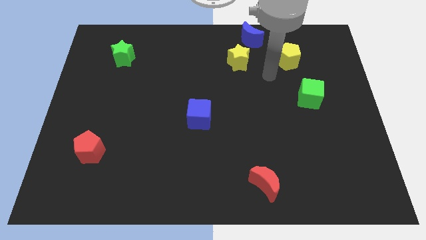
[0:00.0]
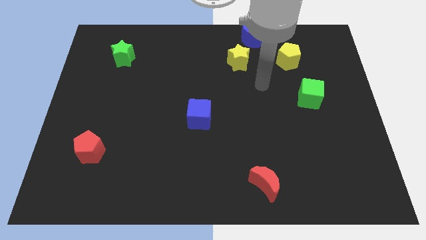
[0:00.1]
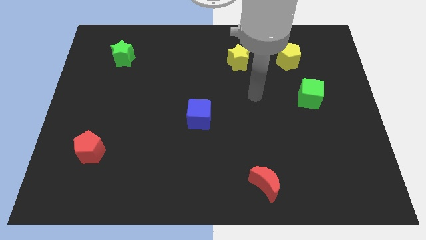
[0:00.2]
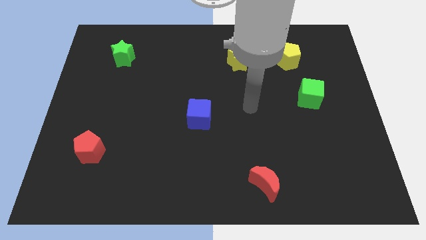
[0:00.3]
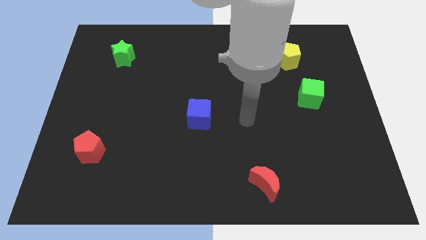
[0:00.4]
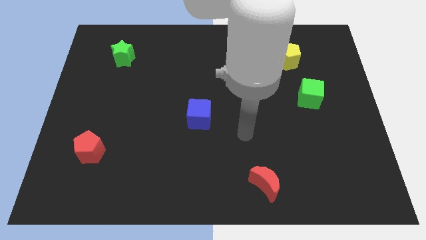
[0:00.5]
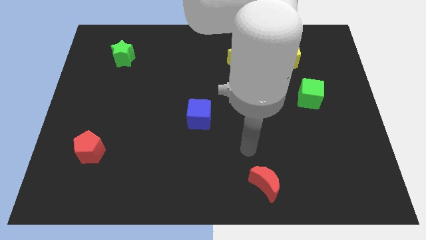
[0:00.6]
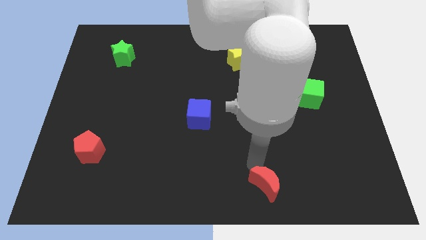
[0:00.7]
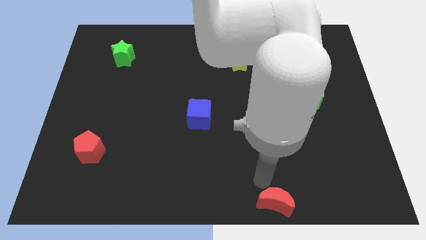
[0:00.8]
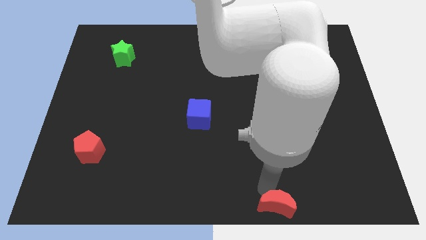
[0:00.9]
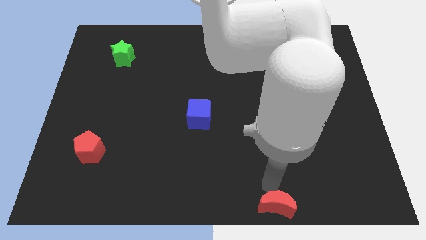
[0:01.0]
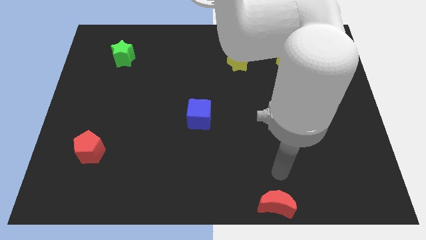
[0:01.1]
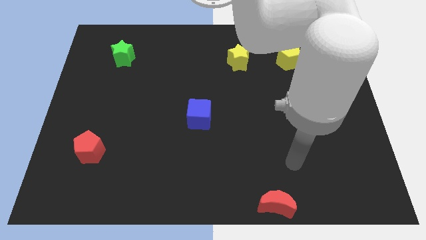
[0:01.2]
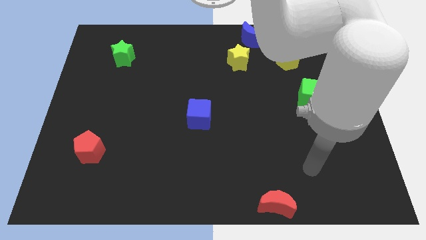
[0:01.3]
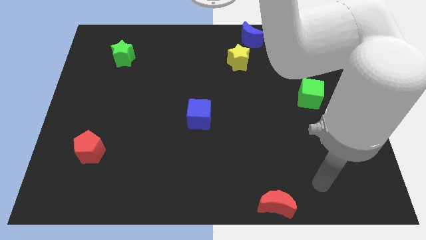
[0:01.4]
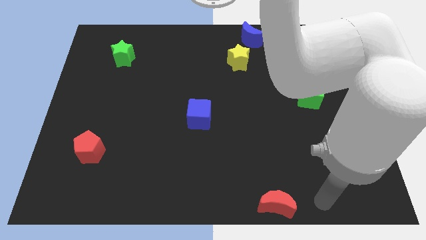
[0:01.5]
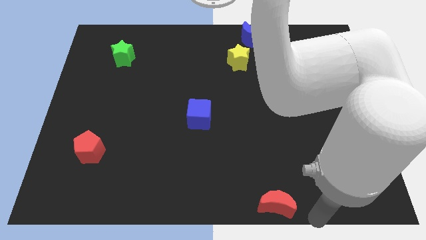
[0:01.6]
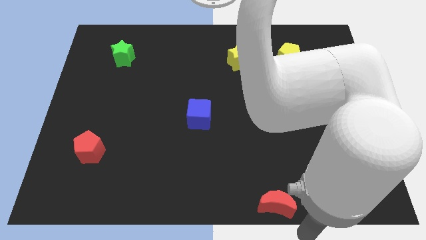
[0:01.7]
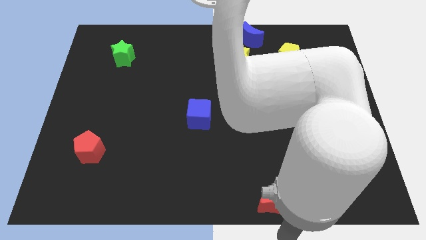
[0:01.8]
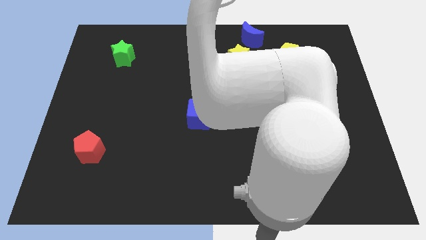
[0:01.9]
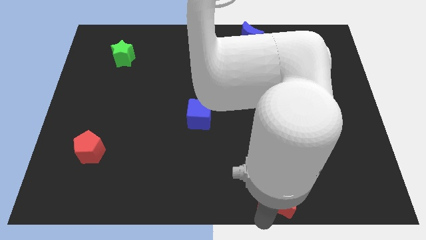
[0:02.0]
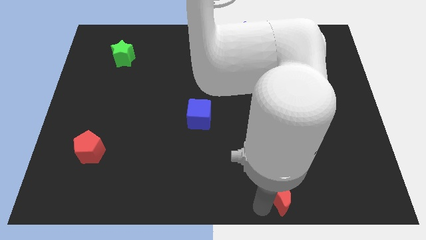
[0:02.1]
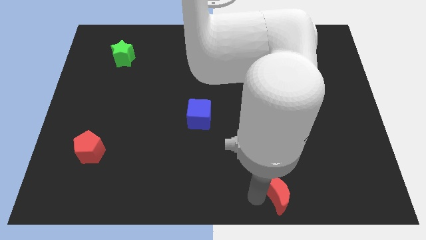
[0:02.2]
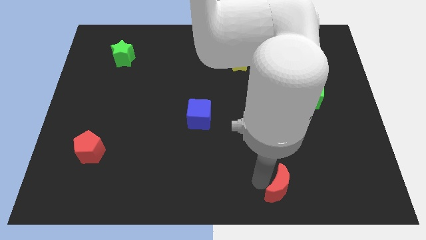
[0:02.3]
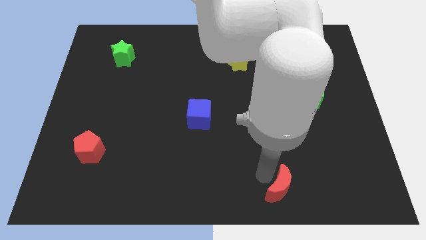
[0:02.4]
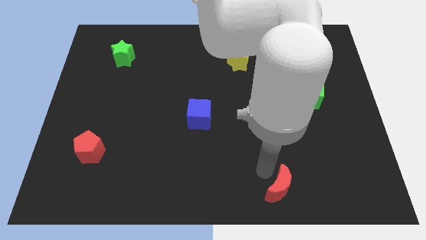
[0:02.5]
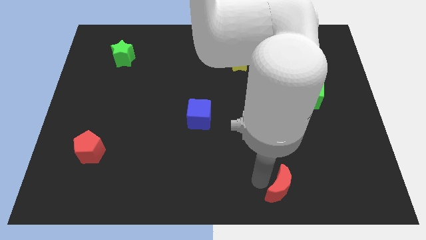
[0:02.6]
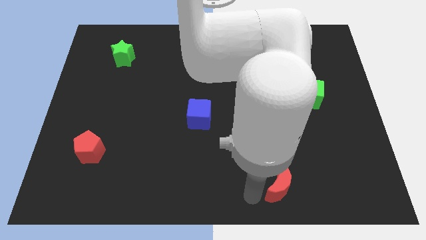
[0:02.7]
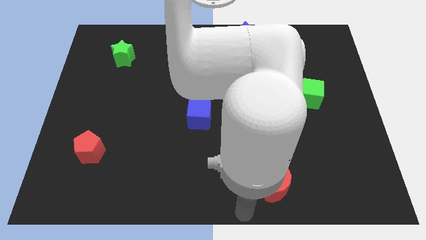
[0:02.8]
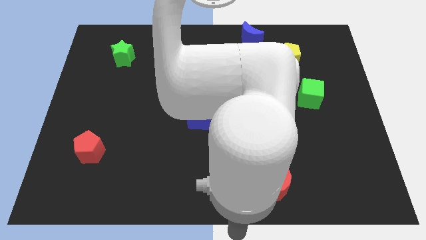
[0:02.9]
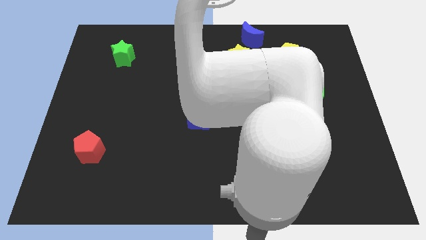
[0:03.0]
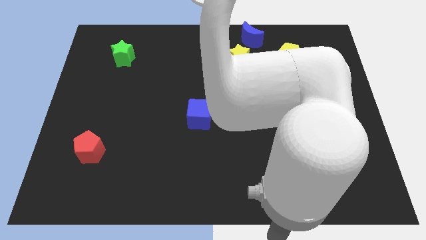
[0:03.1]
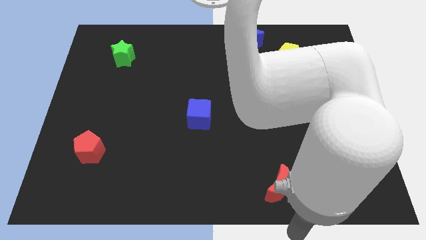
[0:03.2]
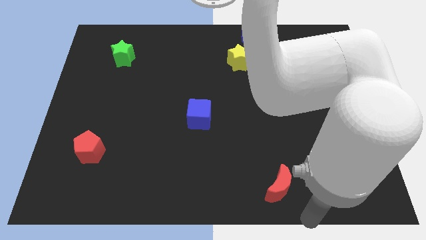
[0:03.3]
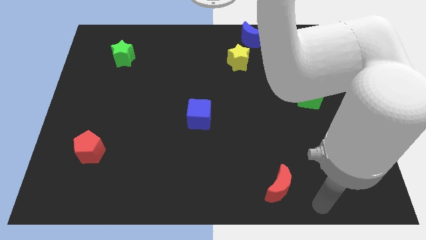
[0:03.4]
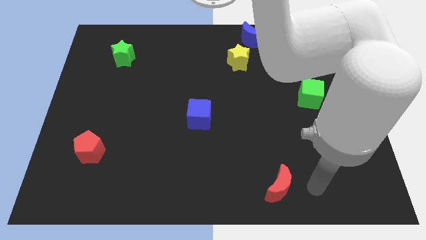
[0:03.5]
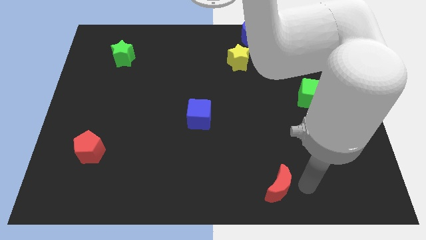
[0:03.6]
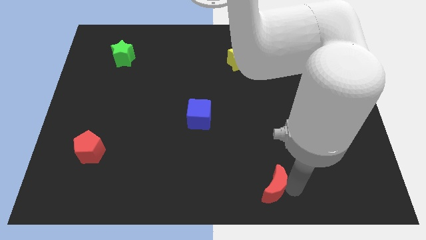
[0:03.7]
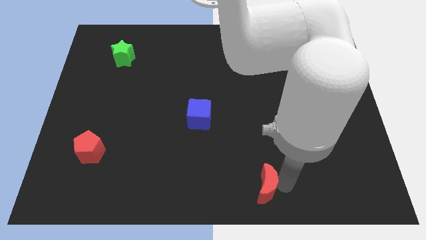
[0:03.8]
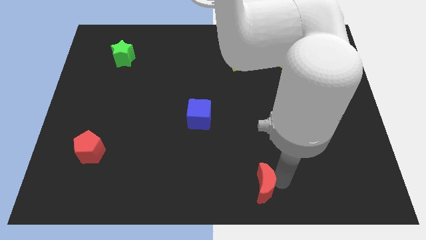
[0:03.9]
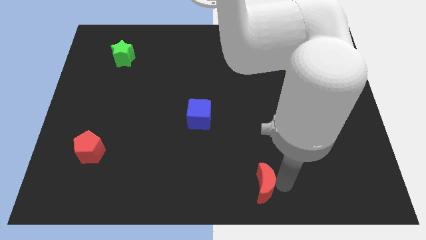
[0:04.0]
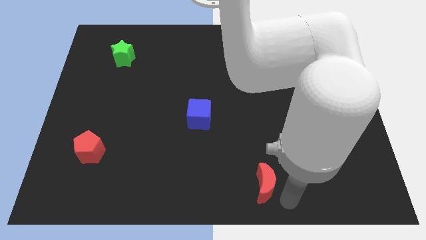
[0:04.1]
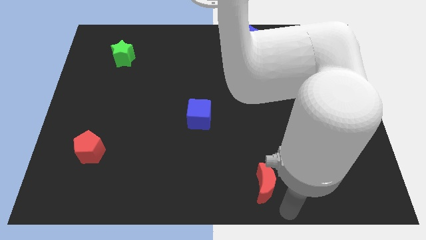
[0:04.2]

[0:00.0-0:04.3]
place the red moon diagonally below the bottom right side of the blue cube

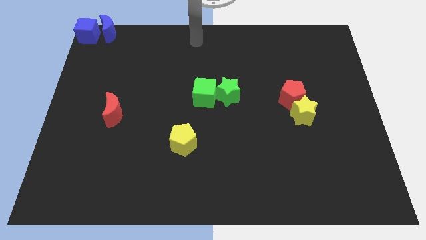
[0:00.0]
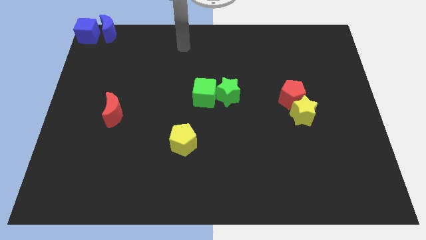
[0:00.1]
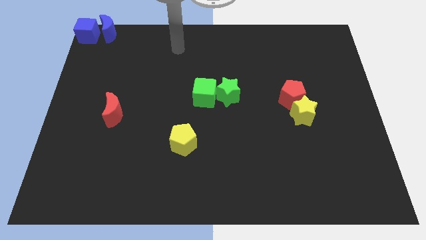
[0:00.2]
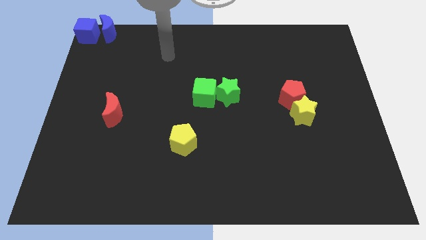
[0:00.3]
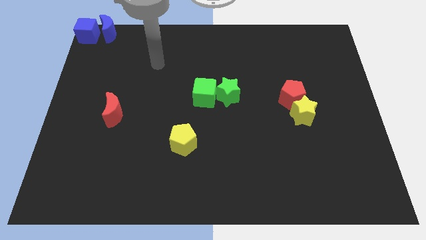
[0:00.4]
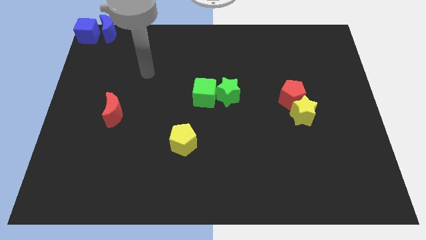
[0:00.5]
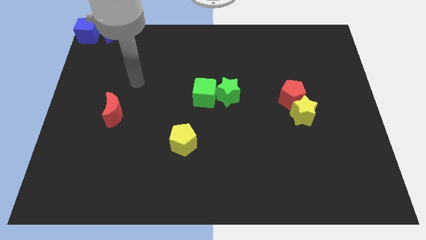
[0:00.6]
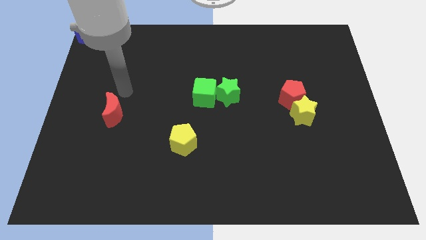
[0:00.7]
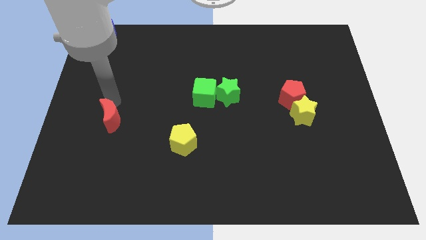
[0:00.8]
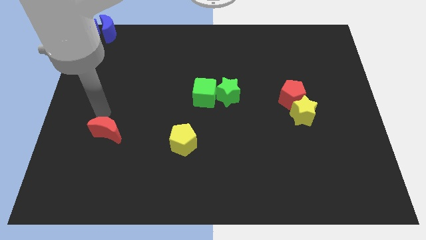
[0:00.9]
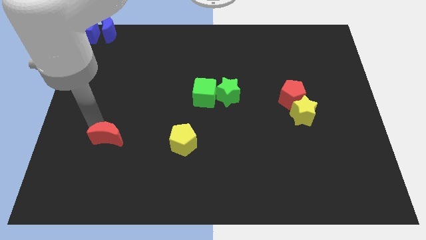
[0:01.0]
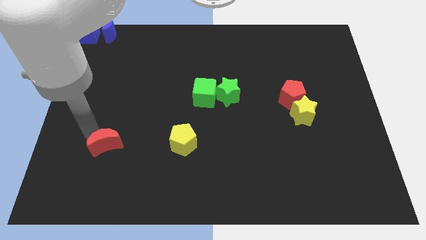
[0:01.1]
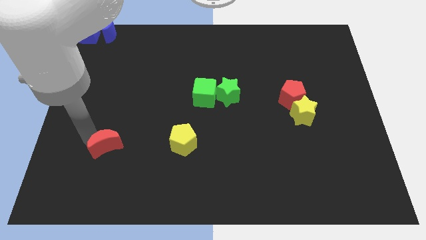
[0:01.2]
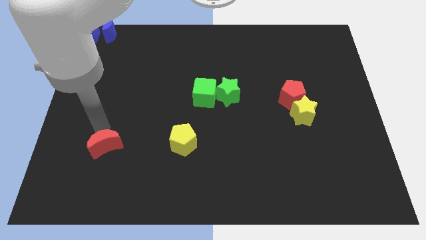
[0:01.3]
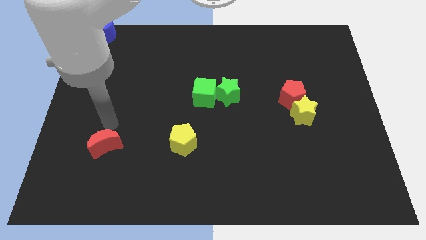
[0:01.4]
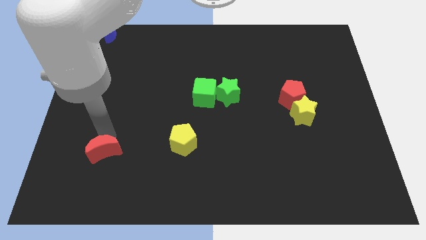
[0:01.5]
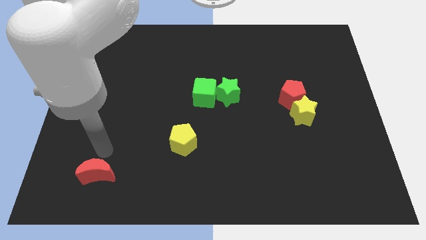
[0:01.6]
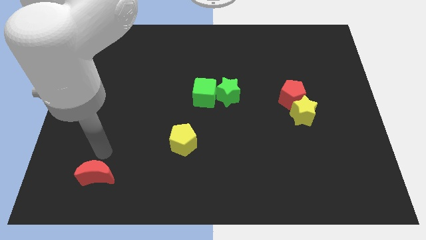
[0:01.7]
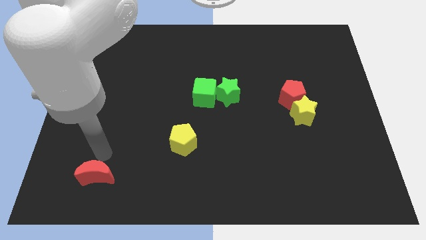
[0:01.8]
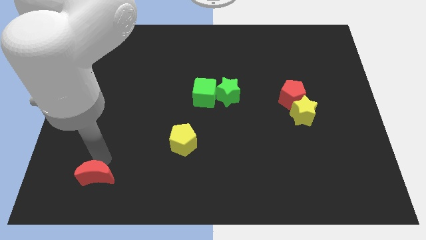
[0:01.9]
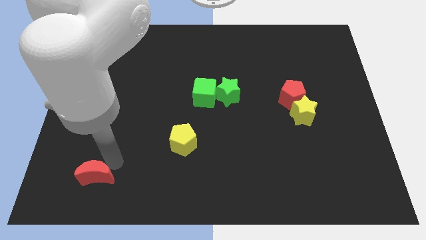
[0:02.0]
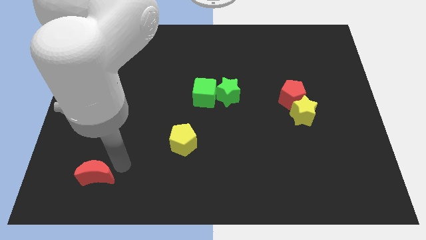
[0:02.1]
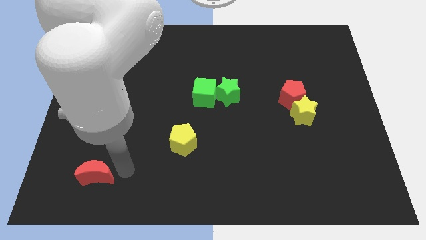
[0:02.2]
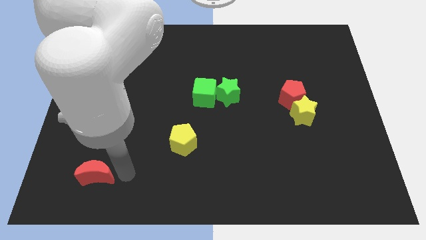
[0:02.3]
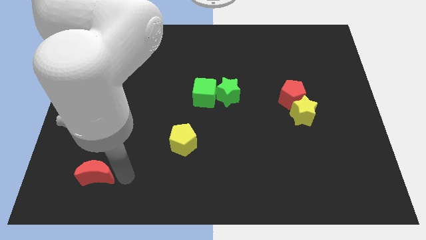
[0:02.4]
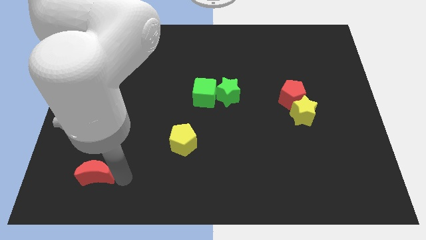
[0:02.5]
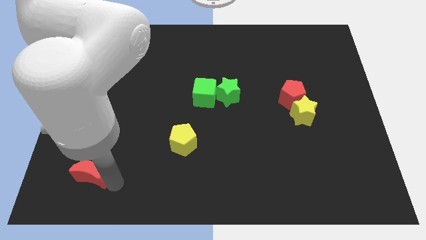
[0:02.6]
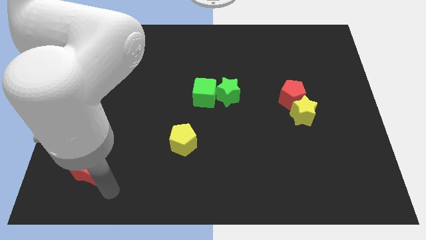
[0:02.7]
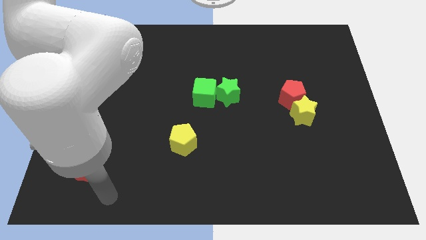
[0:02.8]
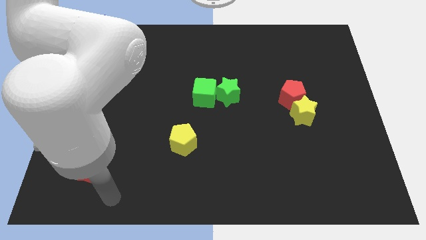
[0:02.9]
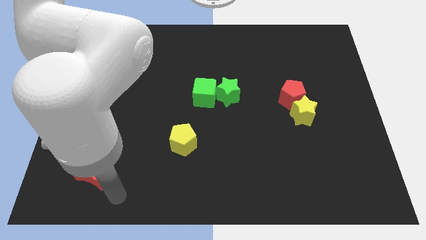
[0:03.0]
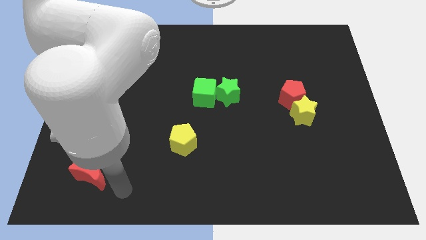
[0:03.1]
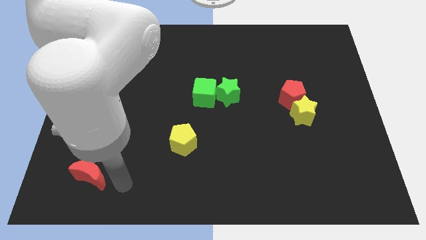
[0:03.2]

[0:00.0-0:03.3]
move the red moon towards the bottom left corner

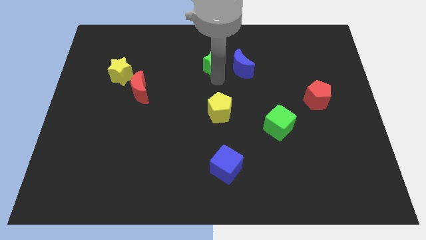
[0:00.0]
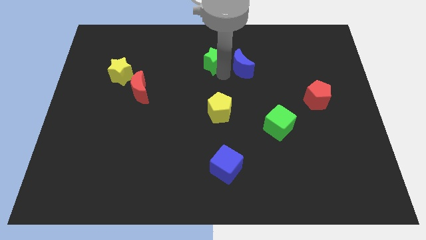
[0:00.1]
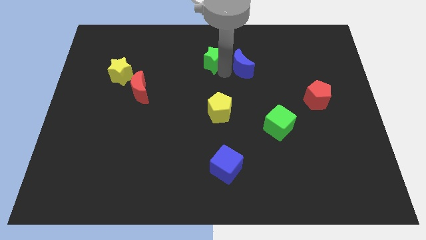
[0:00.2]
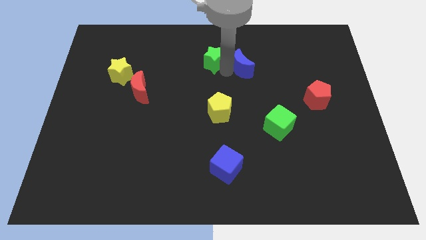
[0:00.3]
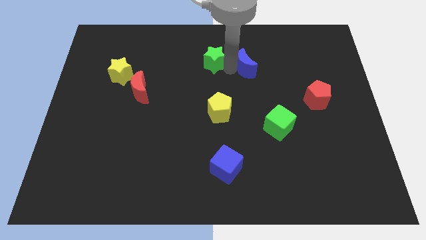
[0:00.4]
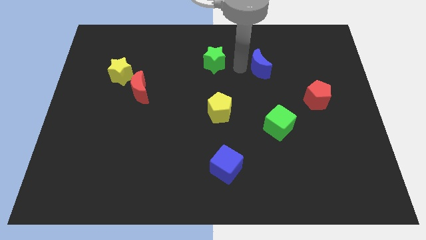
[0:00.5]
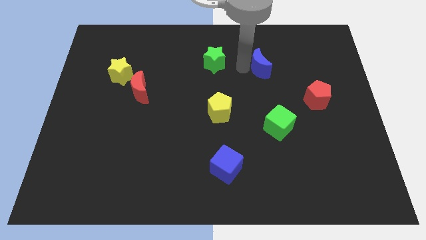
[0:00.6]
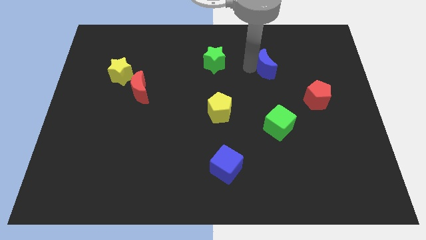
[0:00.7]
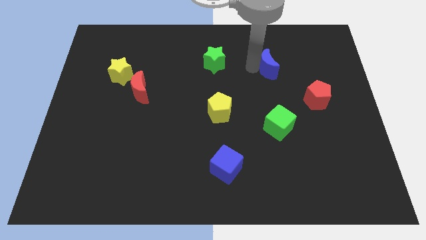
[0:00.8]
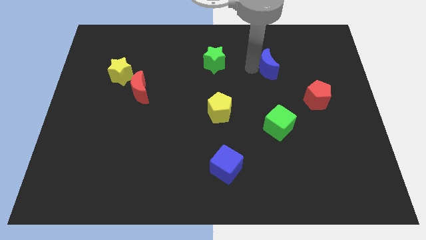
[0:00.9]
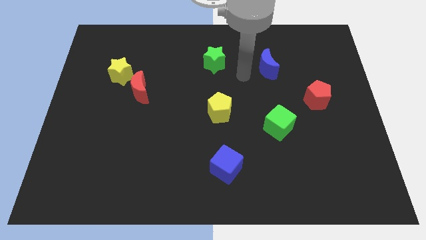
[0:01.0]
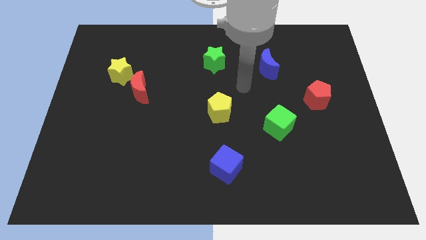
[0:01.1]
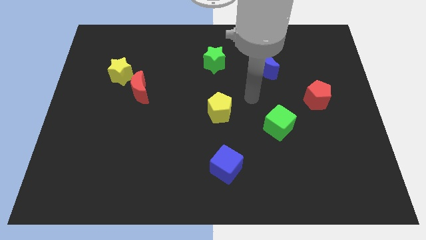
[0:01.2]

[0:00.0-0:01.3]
push the blue moon to the right

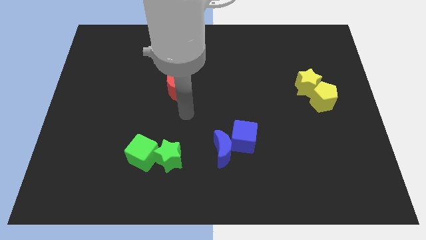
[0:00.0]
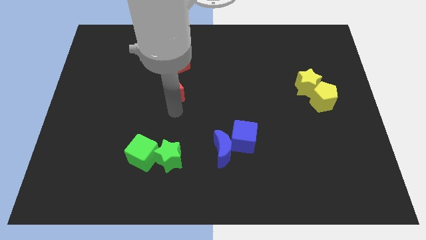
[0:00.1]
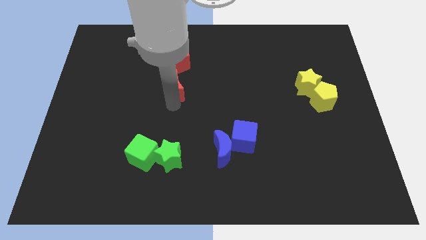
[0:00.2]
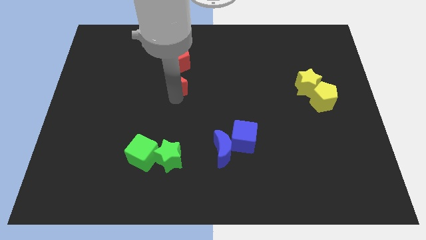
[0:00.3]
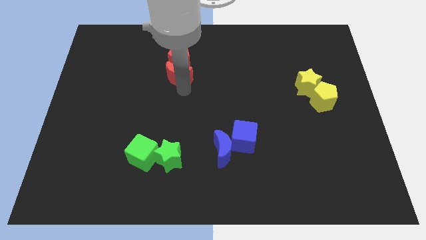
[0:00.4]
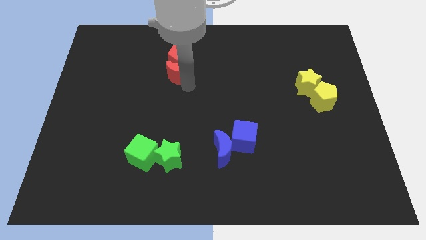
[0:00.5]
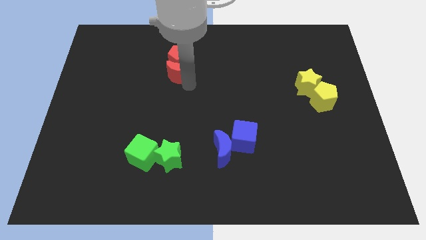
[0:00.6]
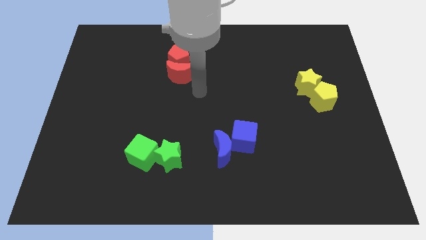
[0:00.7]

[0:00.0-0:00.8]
push red moon into red pentagon
